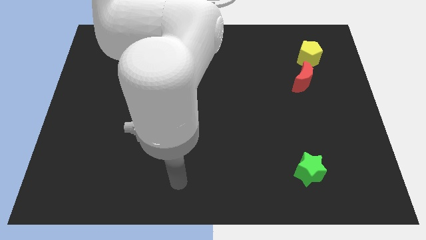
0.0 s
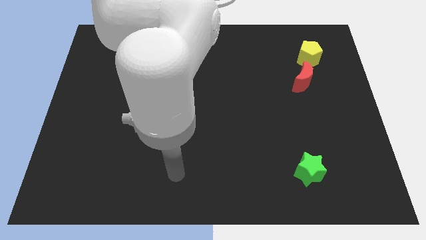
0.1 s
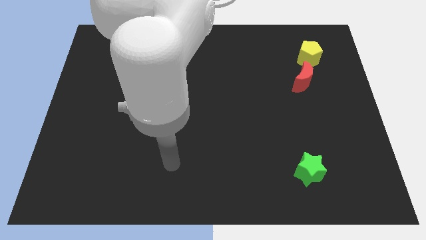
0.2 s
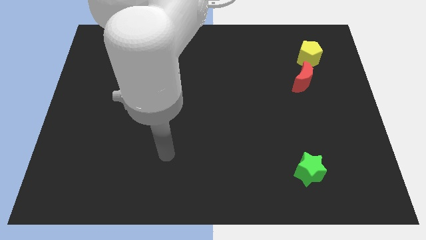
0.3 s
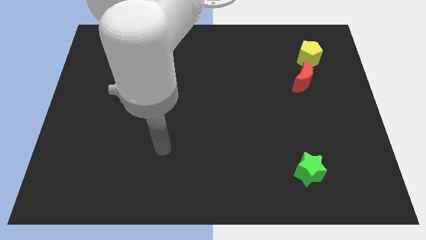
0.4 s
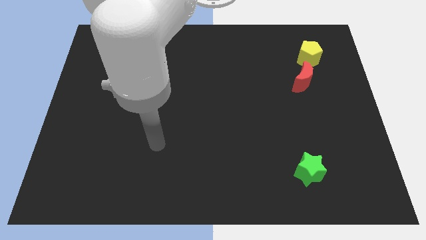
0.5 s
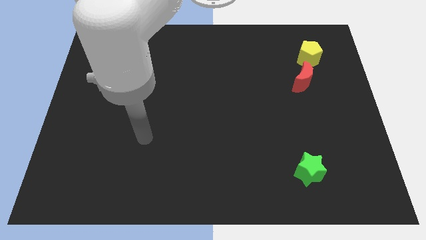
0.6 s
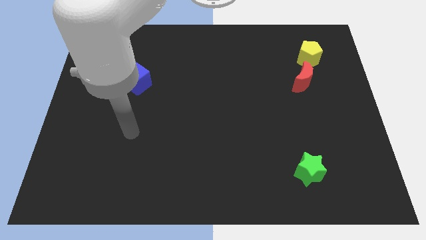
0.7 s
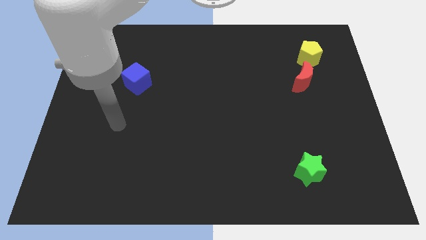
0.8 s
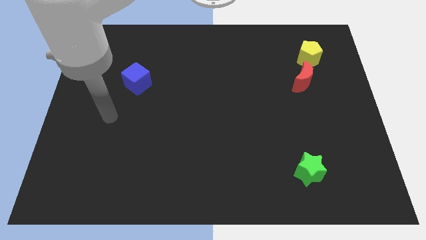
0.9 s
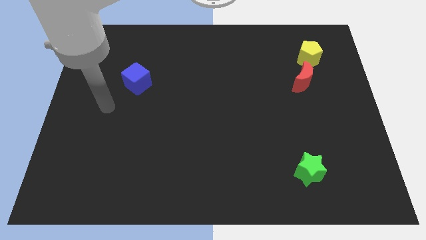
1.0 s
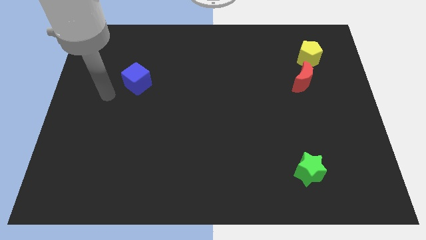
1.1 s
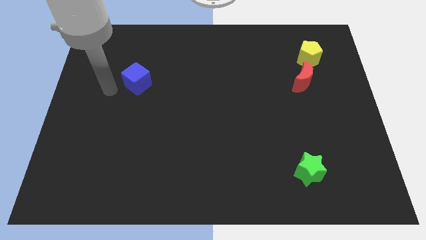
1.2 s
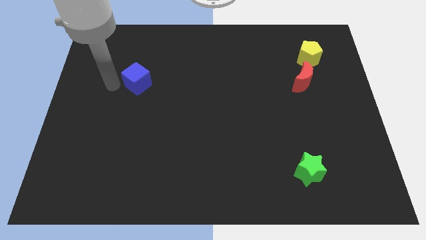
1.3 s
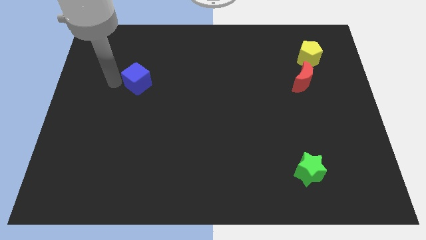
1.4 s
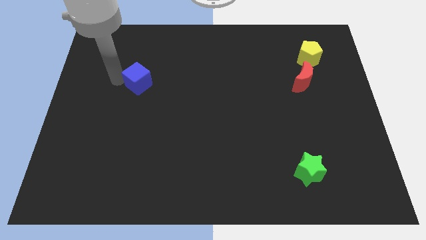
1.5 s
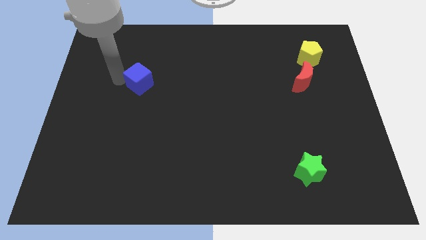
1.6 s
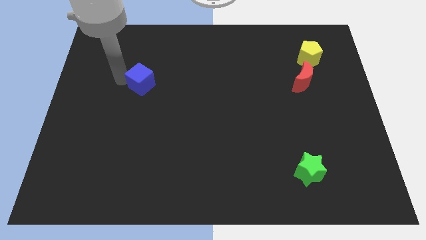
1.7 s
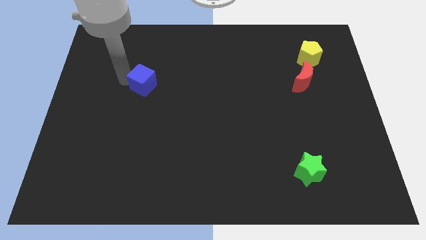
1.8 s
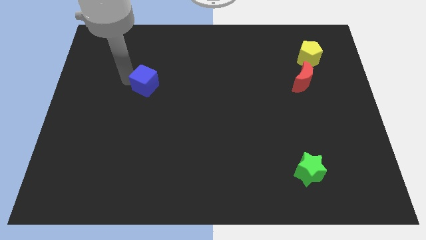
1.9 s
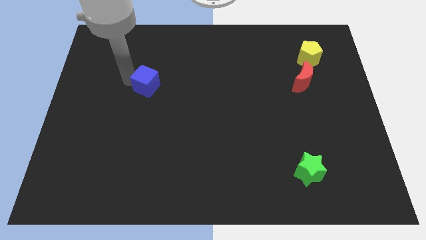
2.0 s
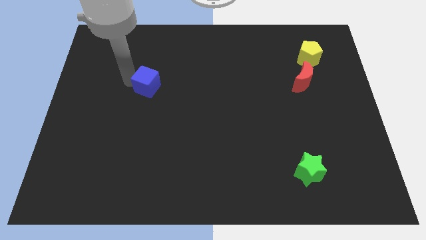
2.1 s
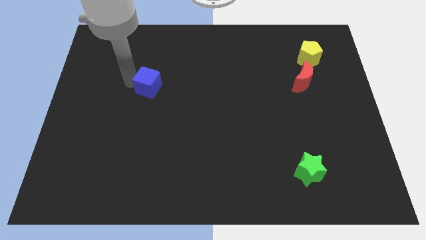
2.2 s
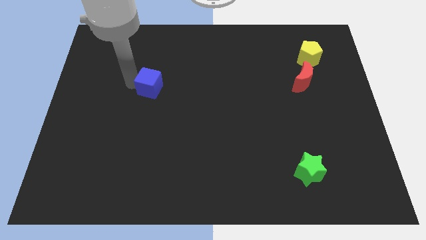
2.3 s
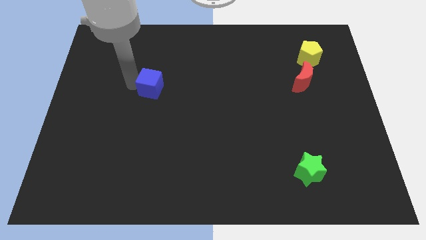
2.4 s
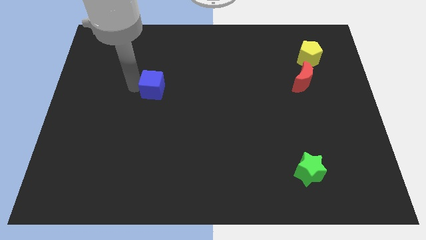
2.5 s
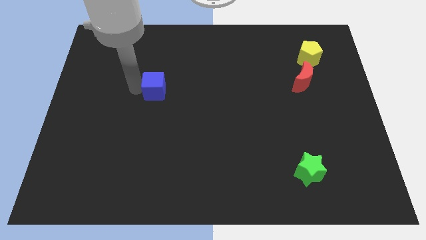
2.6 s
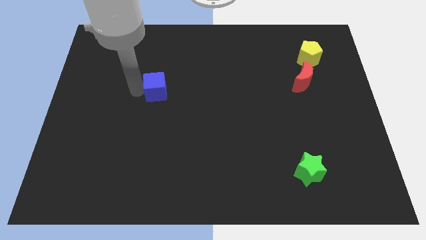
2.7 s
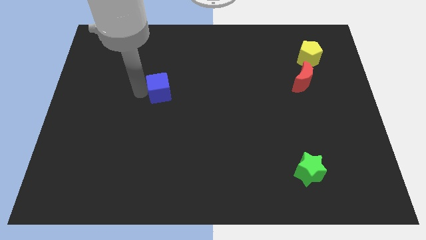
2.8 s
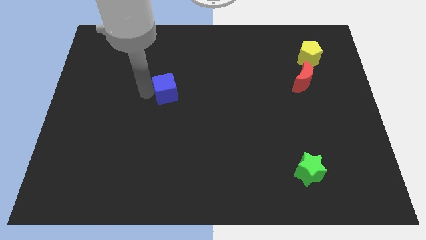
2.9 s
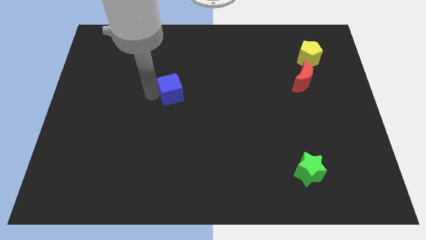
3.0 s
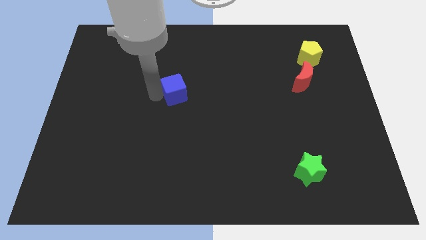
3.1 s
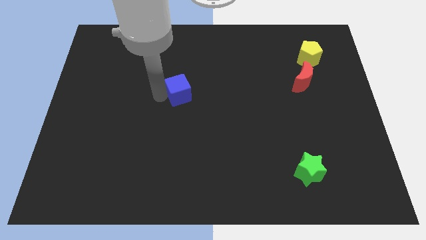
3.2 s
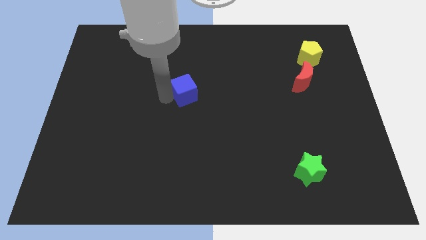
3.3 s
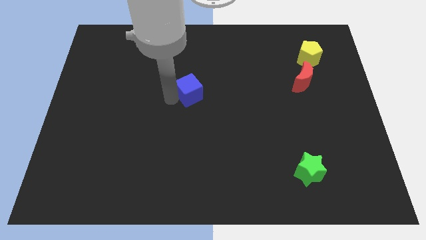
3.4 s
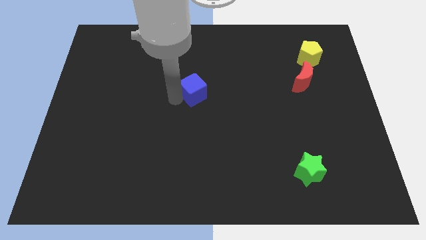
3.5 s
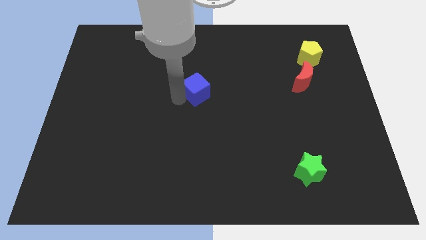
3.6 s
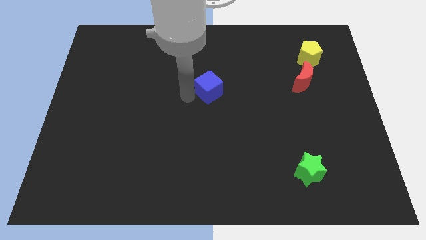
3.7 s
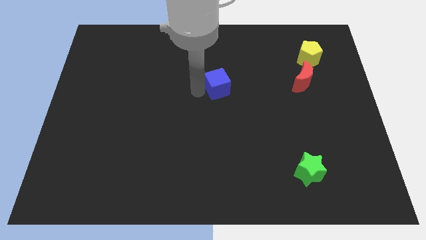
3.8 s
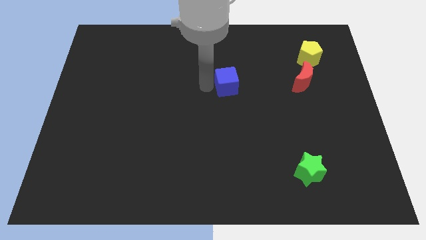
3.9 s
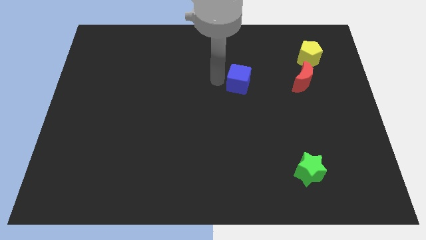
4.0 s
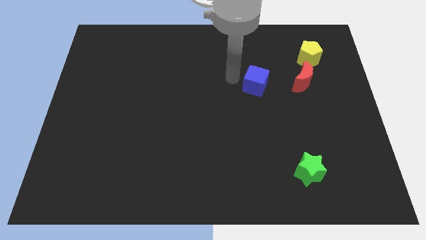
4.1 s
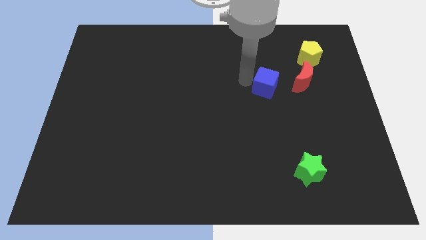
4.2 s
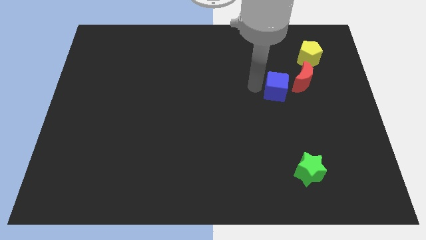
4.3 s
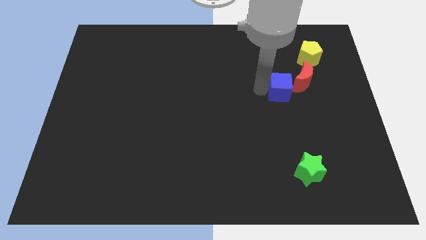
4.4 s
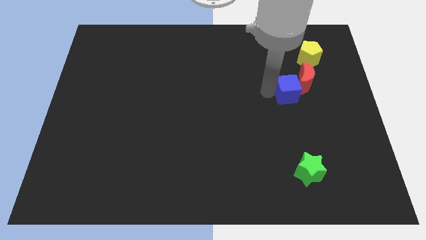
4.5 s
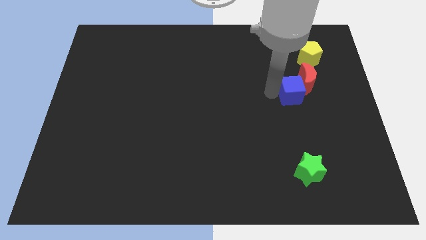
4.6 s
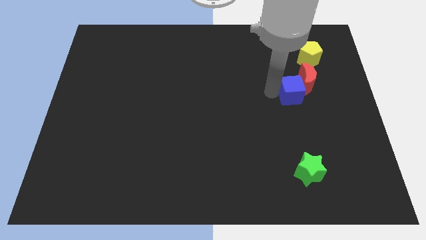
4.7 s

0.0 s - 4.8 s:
move the blue cube next to the red block

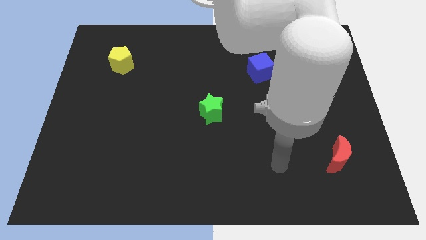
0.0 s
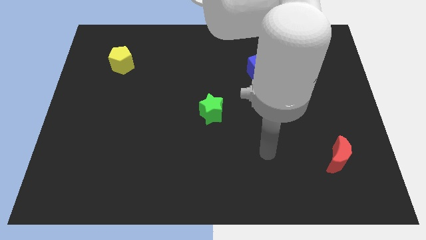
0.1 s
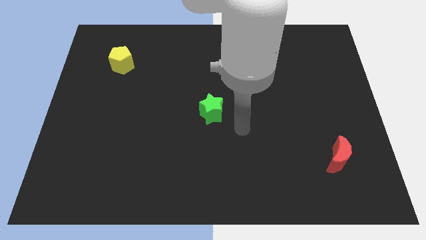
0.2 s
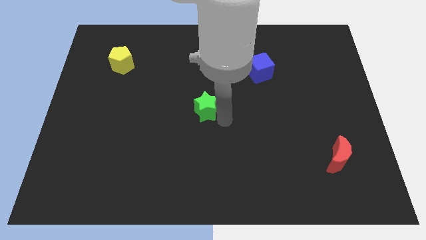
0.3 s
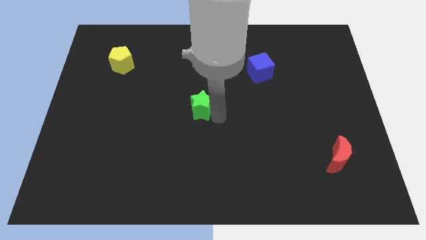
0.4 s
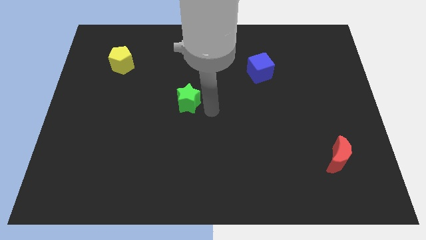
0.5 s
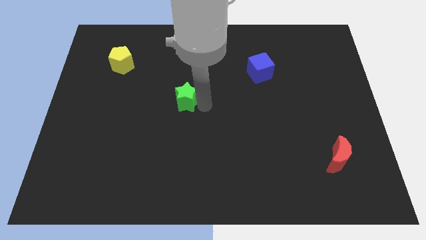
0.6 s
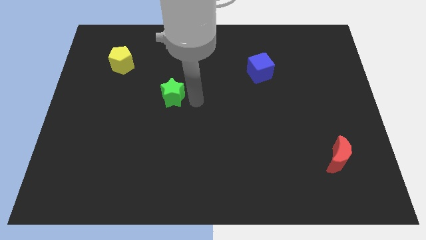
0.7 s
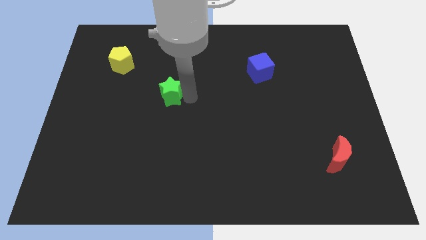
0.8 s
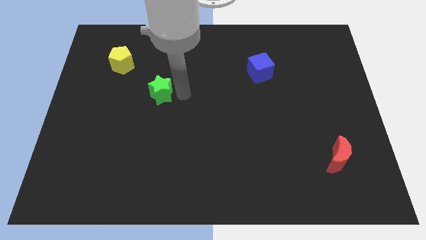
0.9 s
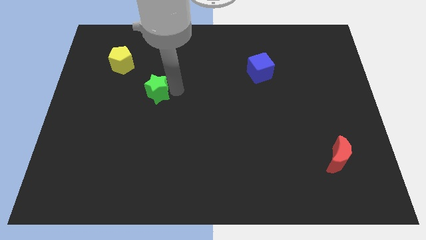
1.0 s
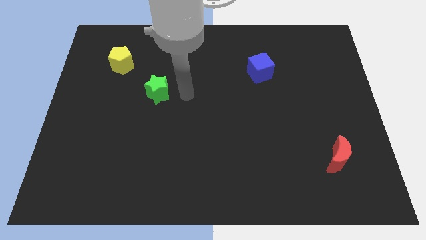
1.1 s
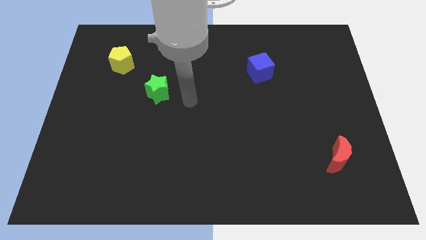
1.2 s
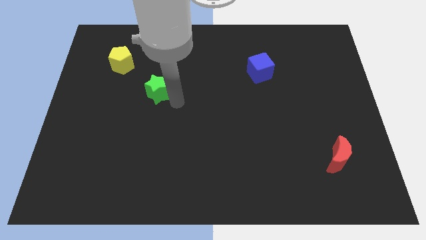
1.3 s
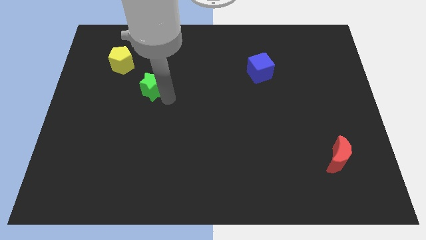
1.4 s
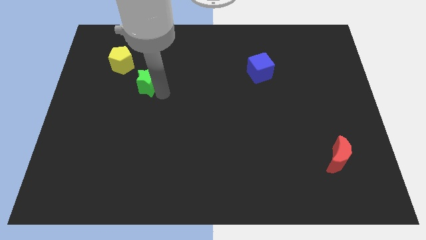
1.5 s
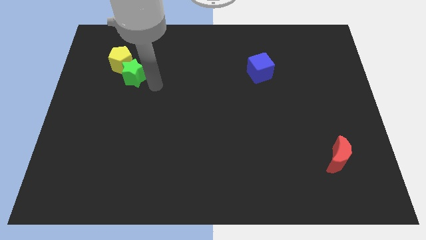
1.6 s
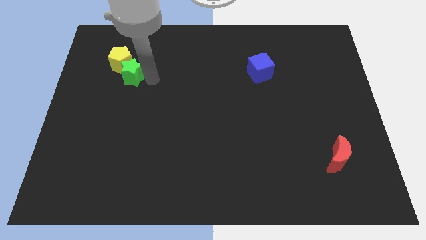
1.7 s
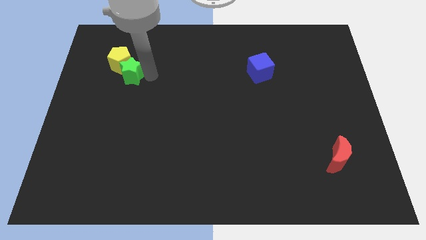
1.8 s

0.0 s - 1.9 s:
push the star close to the pentagon

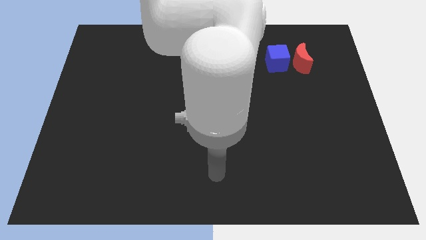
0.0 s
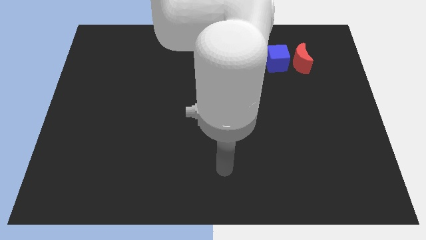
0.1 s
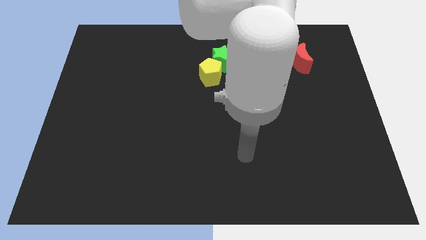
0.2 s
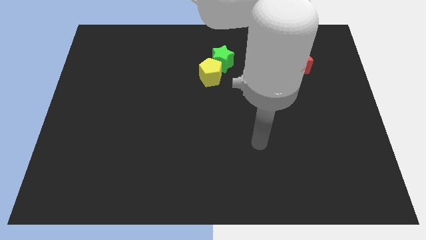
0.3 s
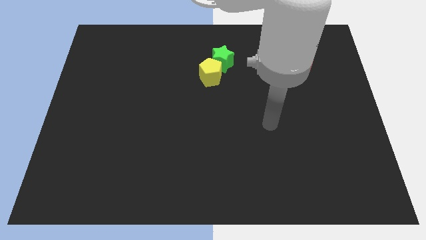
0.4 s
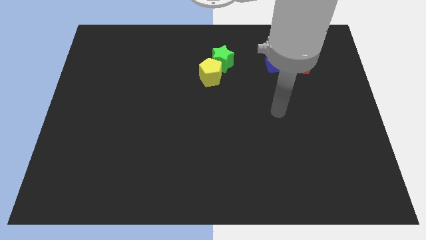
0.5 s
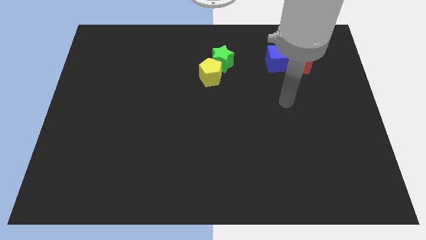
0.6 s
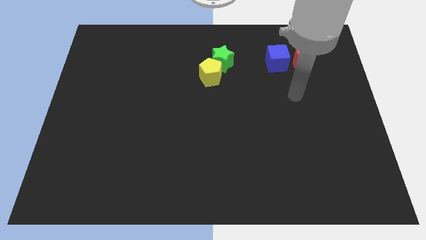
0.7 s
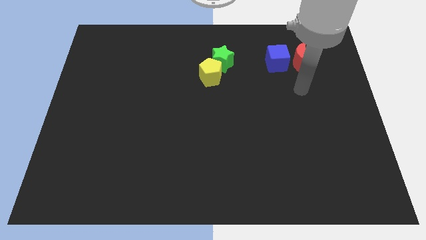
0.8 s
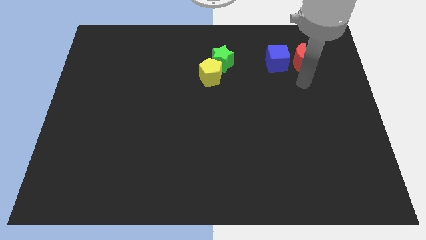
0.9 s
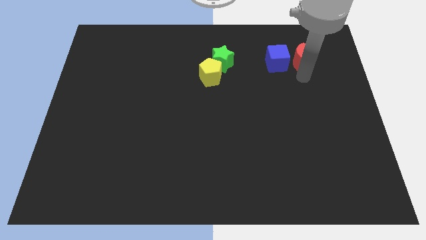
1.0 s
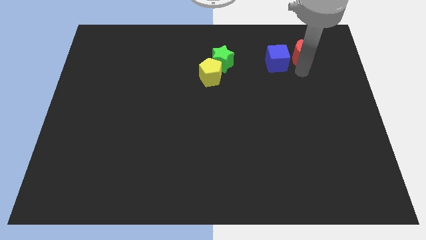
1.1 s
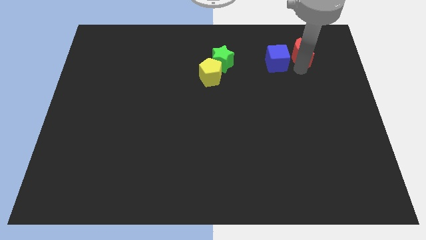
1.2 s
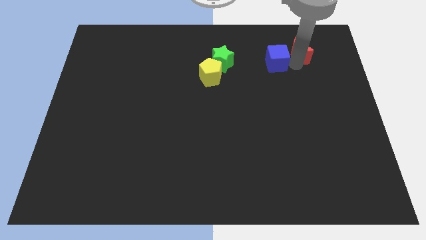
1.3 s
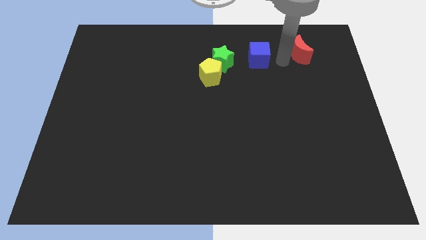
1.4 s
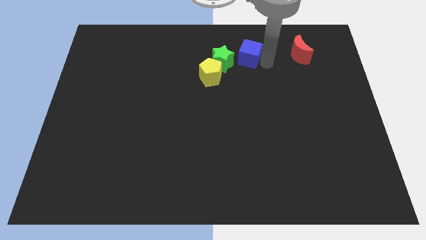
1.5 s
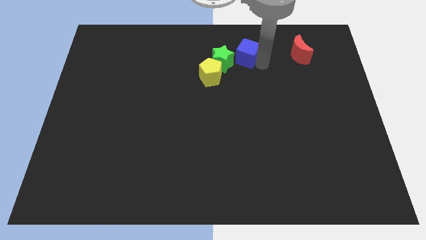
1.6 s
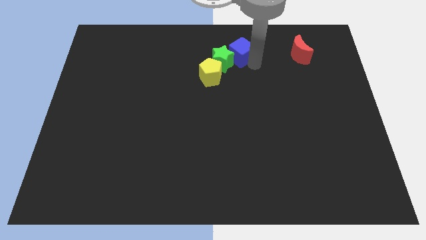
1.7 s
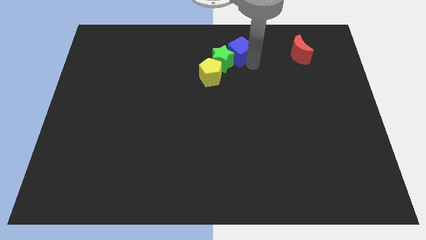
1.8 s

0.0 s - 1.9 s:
move the cube next to the green block
